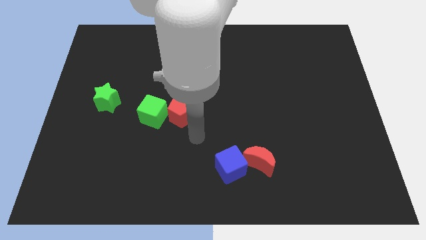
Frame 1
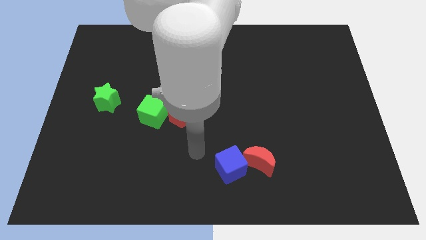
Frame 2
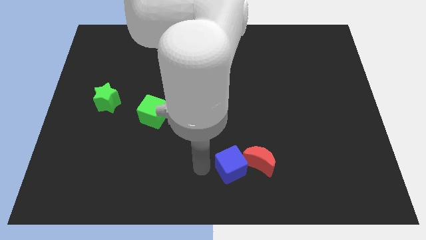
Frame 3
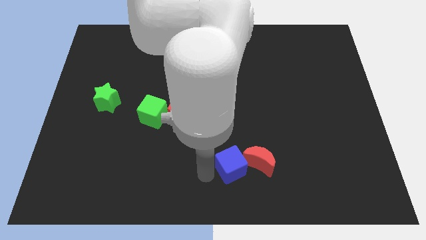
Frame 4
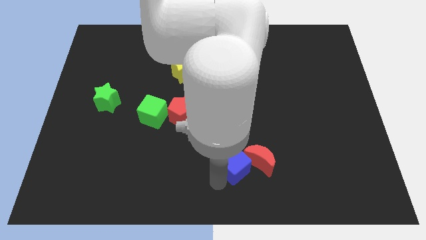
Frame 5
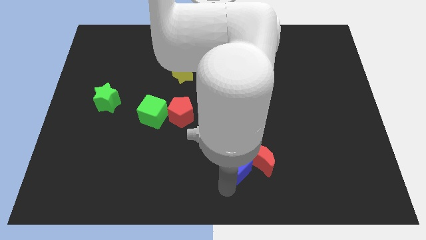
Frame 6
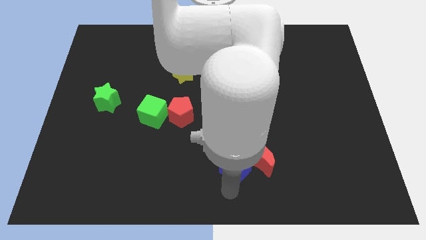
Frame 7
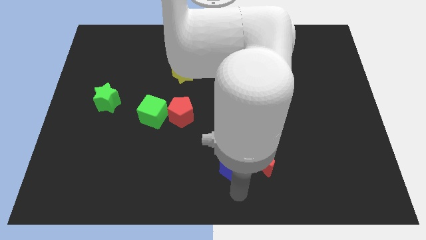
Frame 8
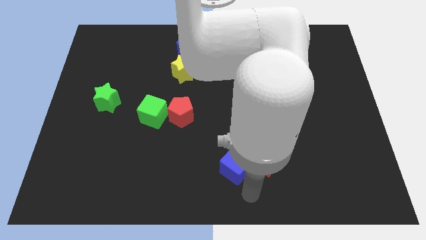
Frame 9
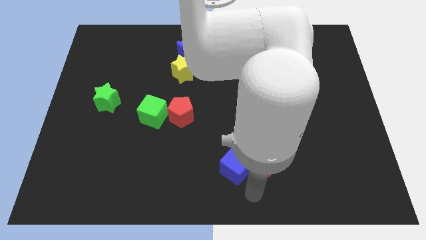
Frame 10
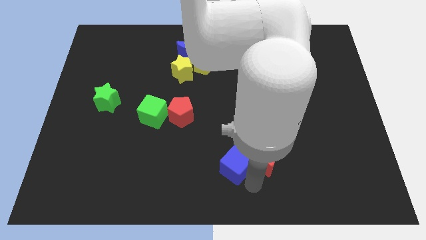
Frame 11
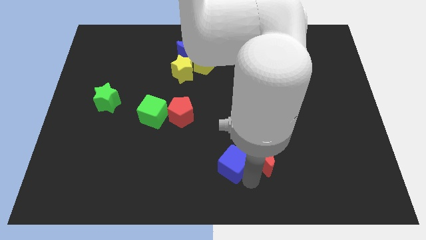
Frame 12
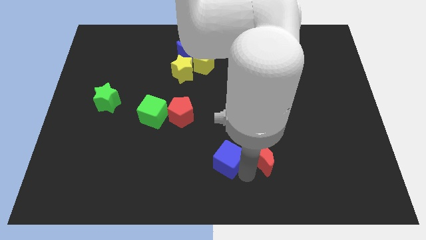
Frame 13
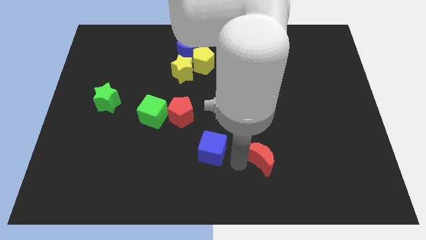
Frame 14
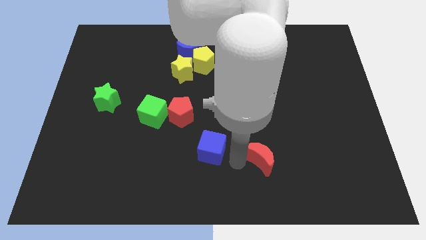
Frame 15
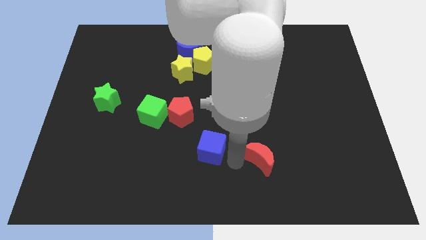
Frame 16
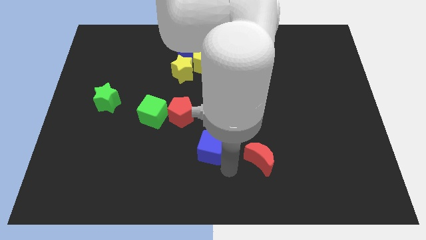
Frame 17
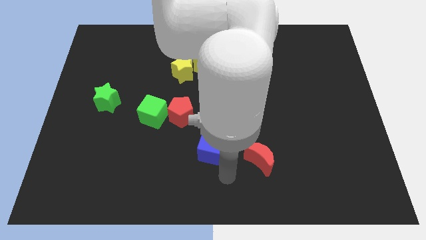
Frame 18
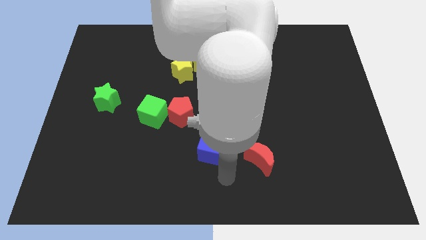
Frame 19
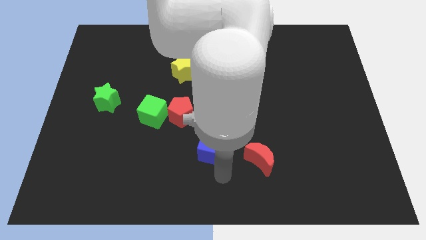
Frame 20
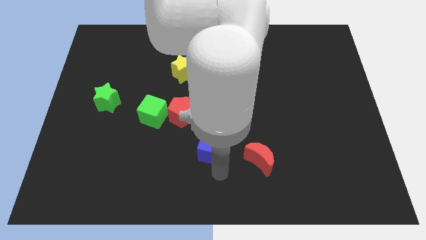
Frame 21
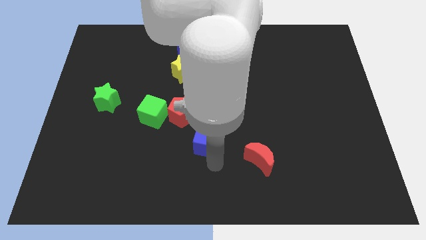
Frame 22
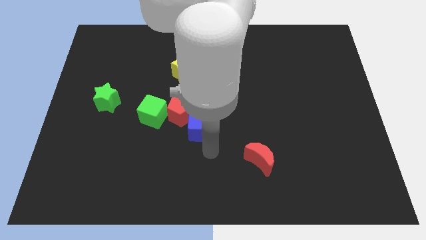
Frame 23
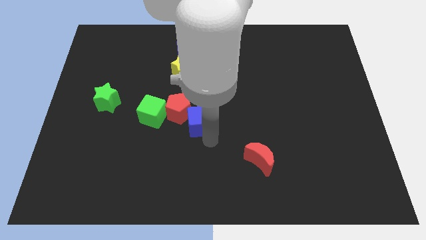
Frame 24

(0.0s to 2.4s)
place blue cube below the red pentagon

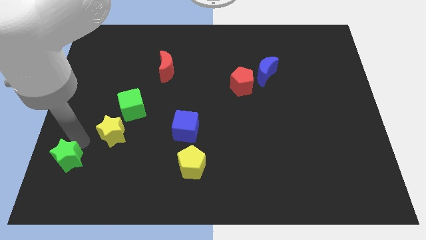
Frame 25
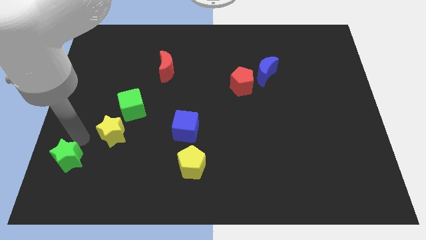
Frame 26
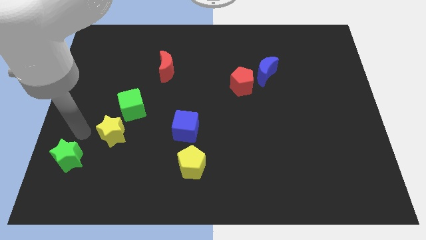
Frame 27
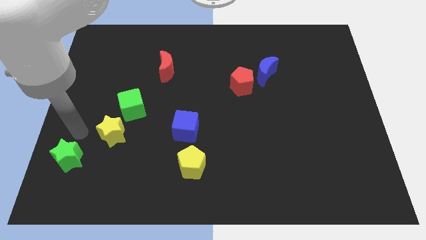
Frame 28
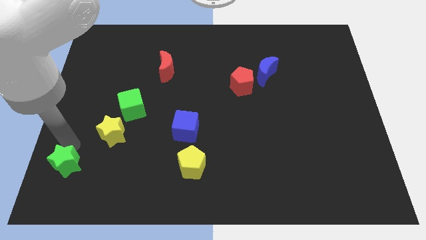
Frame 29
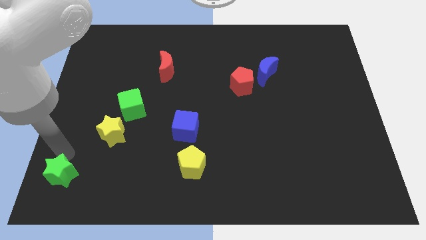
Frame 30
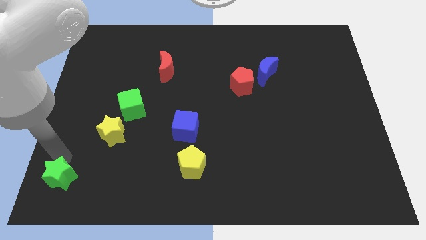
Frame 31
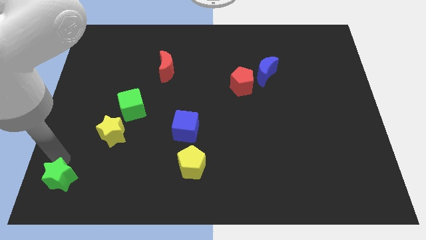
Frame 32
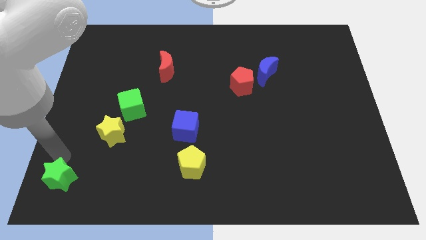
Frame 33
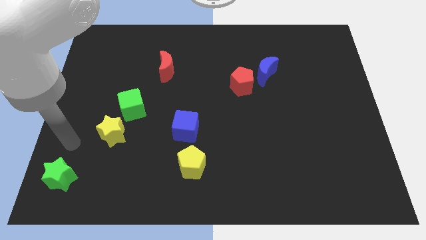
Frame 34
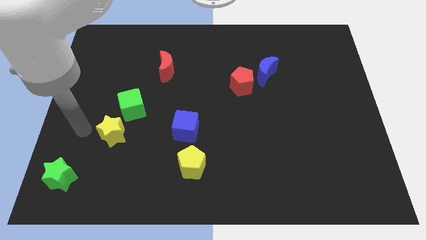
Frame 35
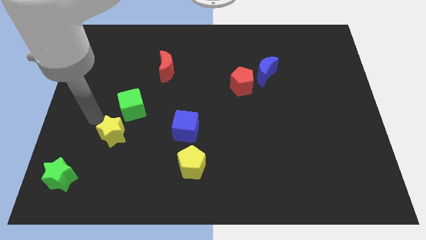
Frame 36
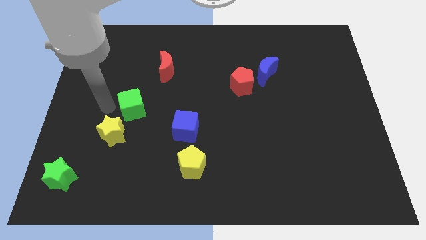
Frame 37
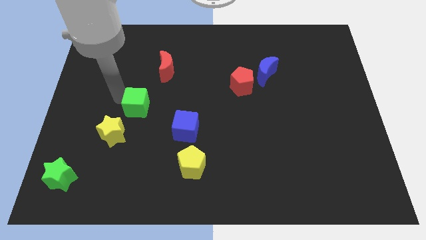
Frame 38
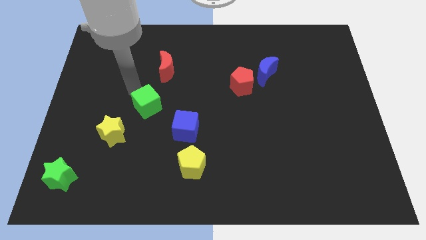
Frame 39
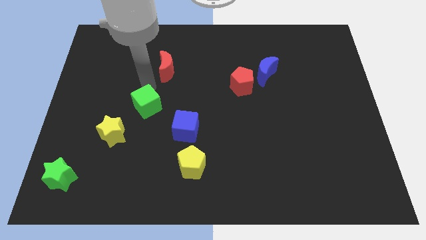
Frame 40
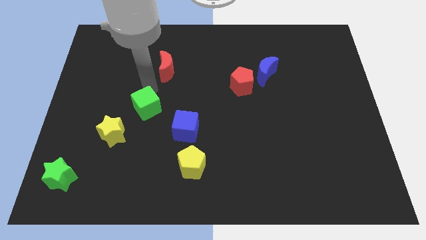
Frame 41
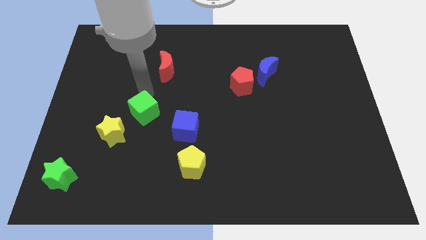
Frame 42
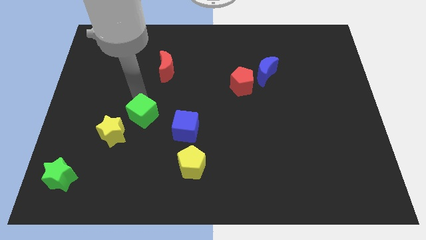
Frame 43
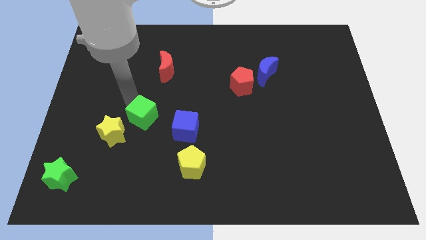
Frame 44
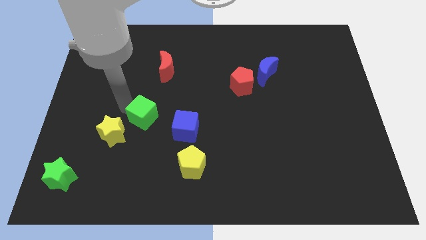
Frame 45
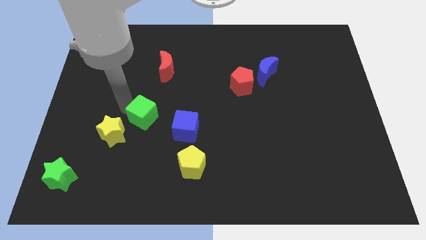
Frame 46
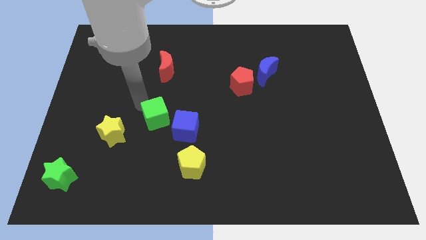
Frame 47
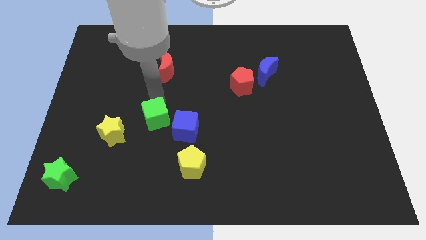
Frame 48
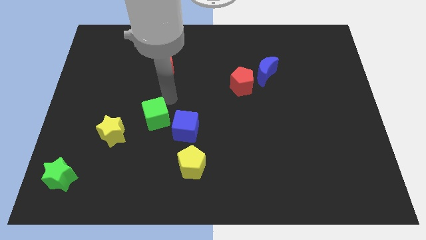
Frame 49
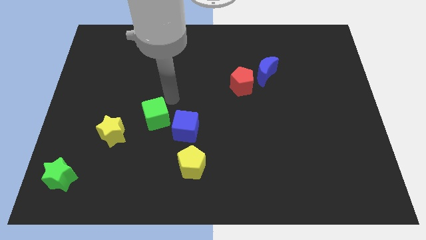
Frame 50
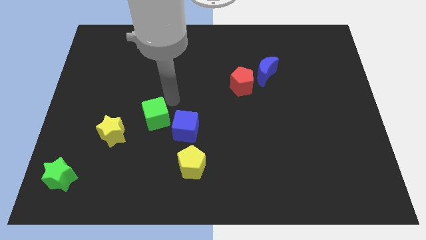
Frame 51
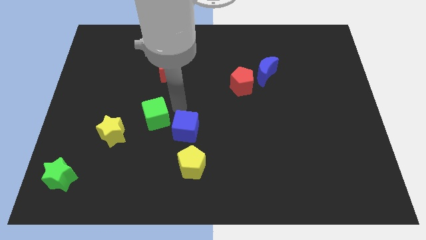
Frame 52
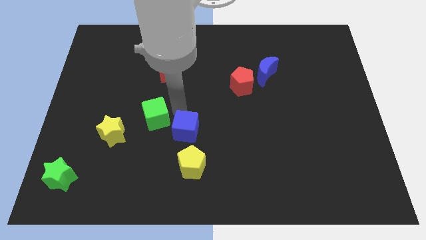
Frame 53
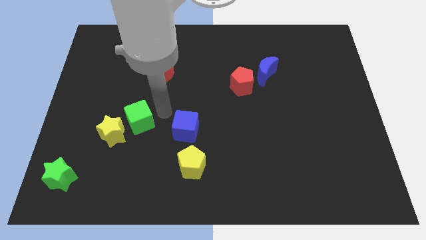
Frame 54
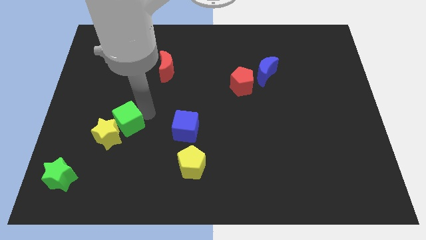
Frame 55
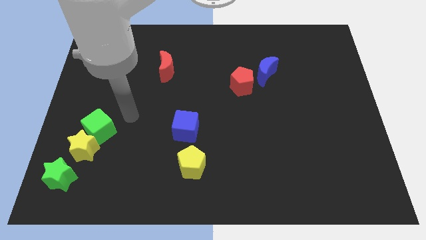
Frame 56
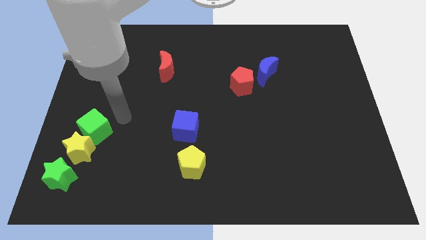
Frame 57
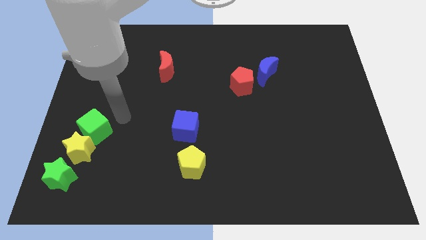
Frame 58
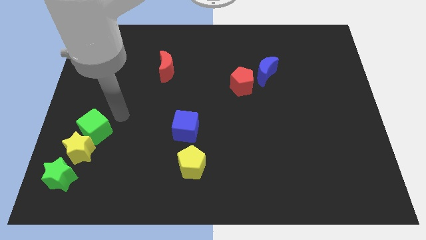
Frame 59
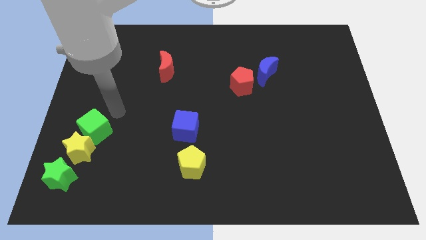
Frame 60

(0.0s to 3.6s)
push the green cube and yellow star towards the green star

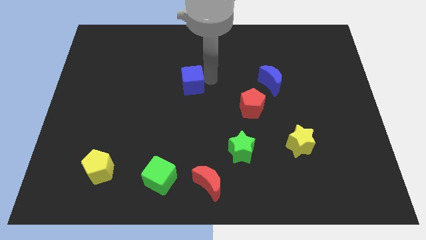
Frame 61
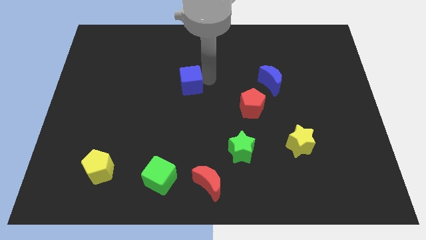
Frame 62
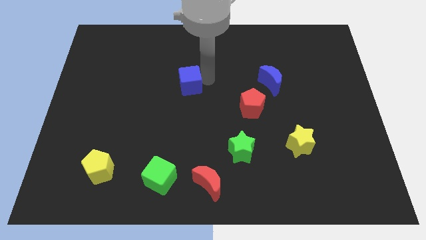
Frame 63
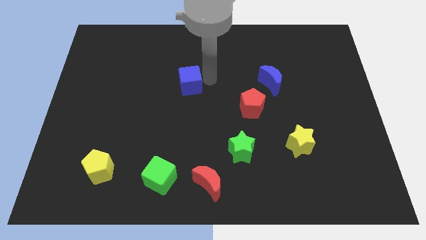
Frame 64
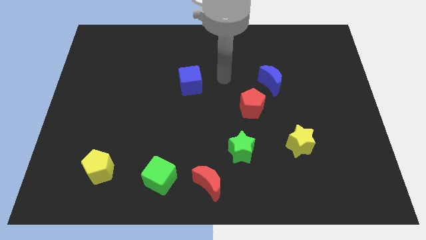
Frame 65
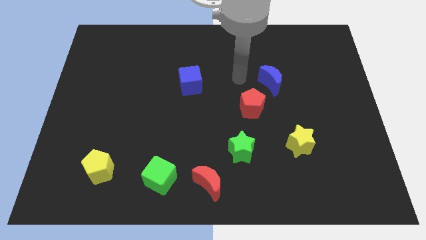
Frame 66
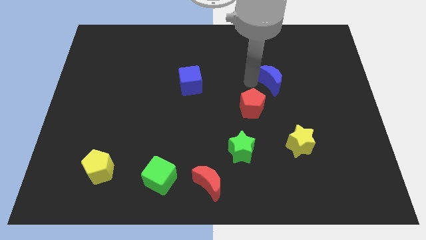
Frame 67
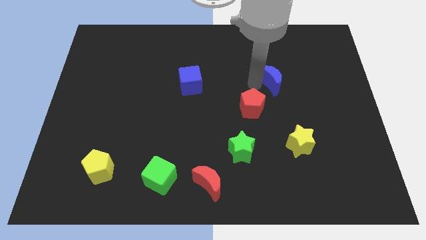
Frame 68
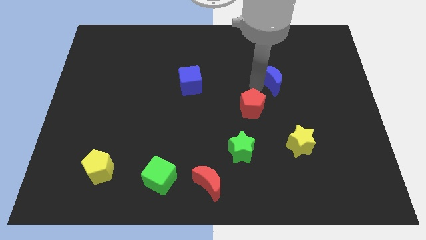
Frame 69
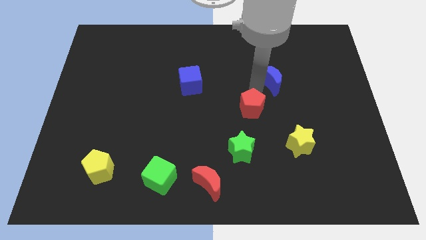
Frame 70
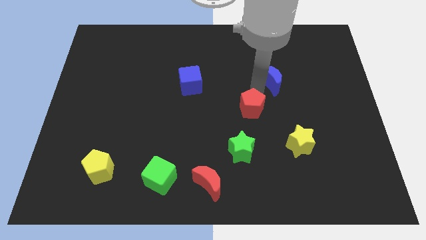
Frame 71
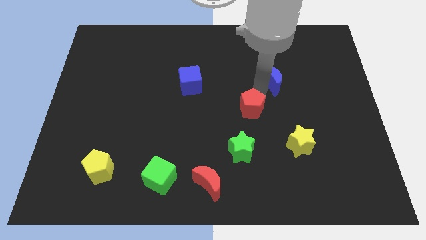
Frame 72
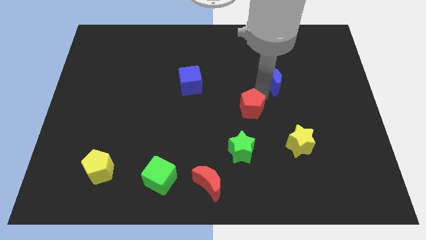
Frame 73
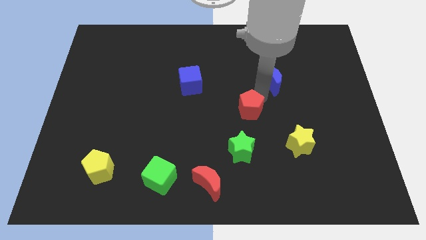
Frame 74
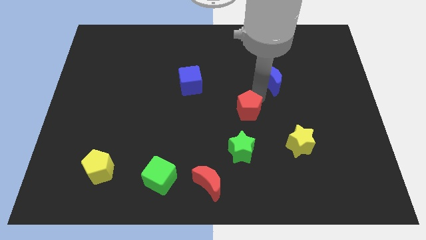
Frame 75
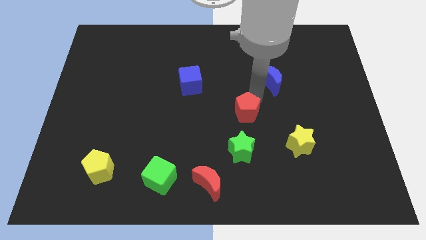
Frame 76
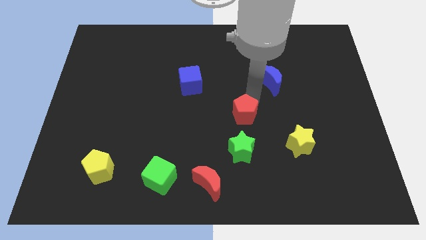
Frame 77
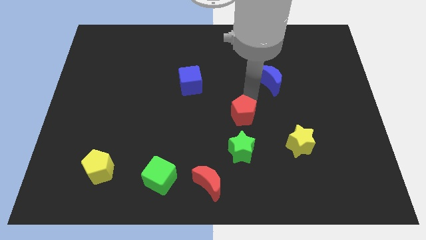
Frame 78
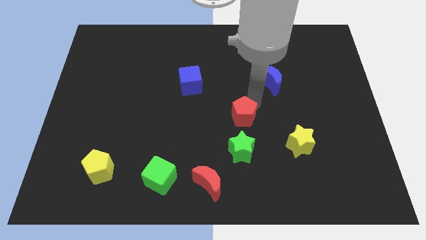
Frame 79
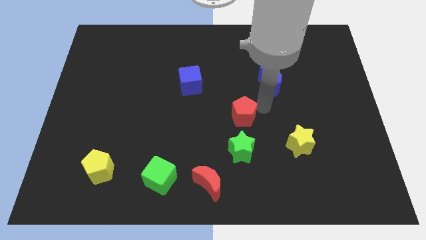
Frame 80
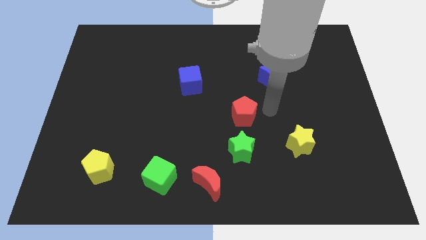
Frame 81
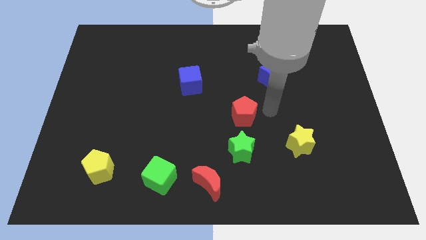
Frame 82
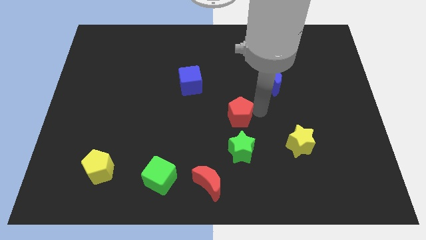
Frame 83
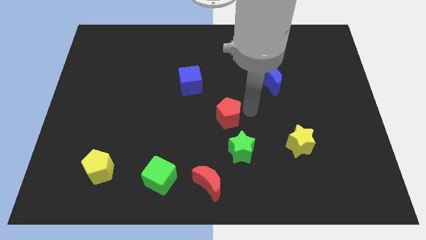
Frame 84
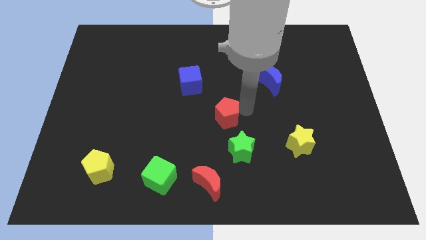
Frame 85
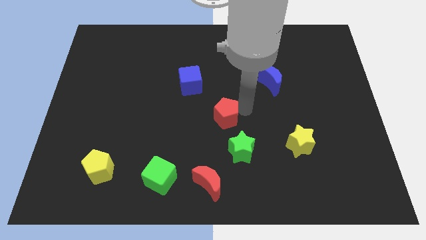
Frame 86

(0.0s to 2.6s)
move the blue cube and red pentagon diagonal to each other

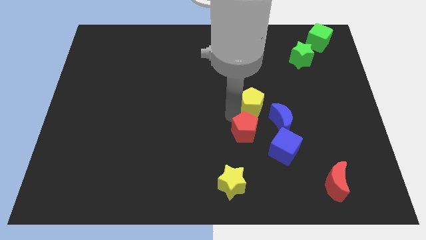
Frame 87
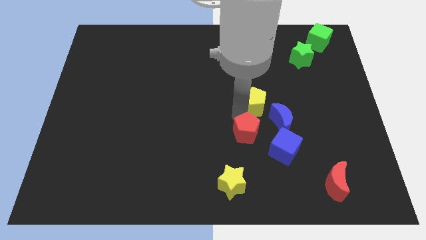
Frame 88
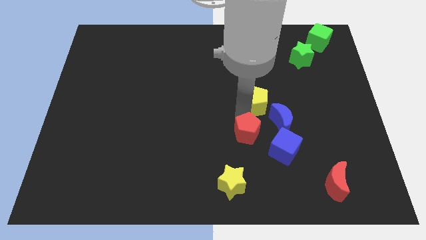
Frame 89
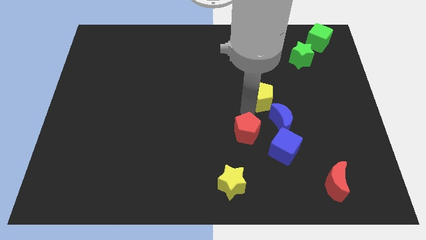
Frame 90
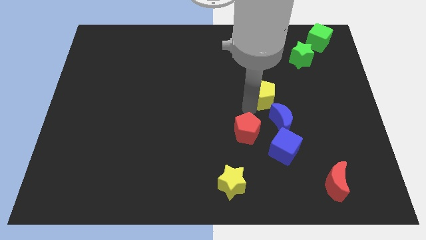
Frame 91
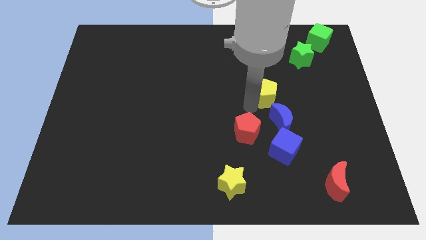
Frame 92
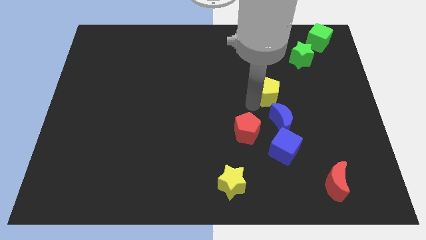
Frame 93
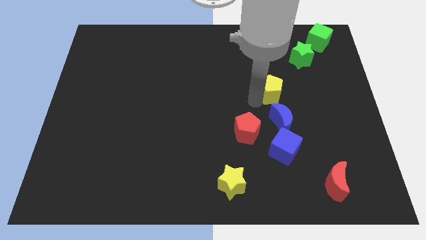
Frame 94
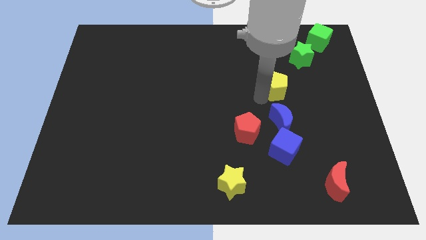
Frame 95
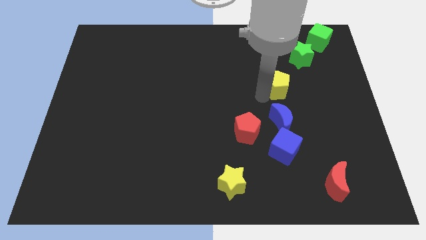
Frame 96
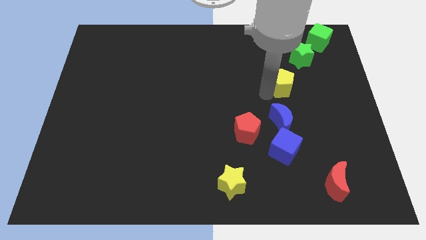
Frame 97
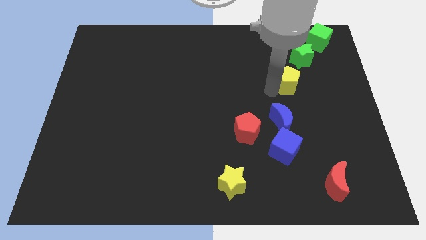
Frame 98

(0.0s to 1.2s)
move the yellow pentagon above the blue moon
